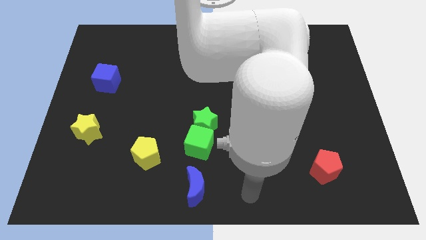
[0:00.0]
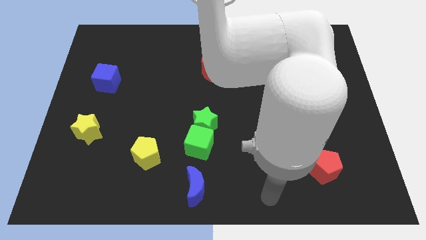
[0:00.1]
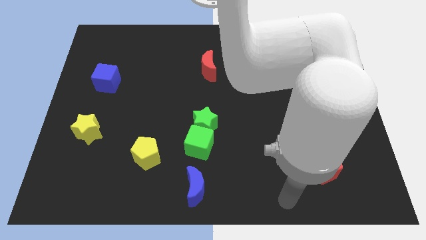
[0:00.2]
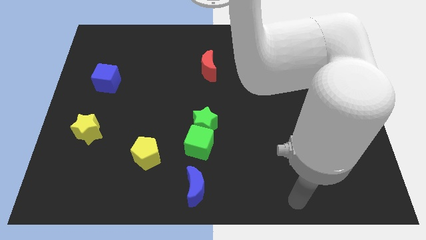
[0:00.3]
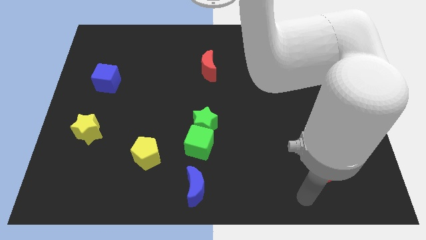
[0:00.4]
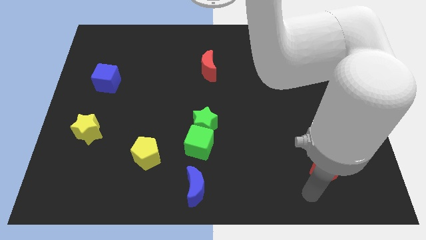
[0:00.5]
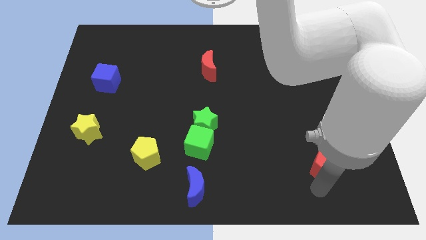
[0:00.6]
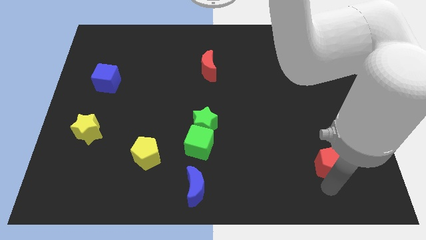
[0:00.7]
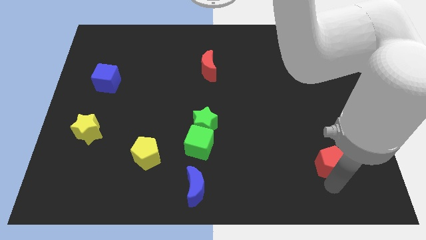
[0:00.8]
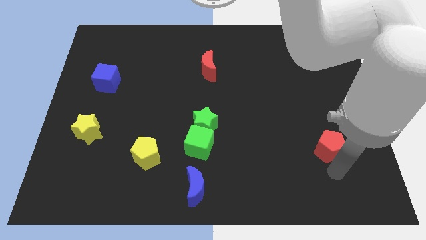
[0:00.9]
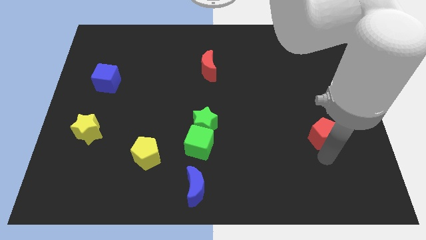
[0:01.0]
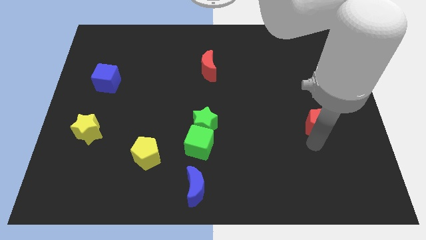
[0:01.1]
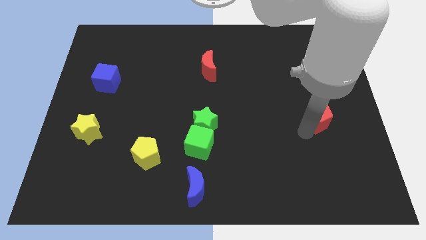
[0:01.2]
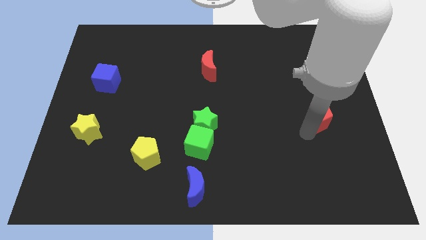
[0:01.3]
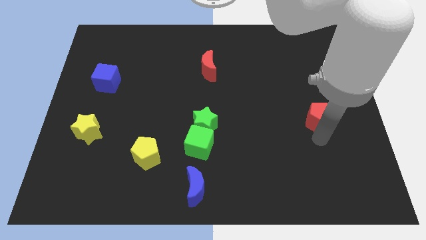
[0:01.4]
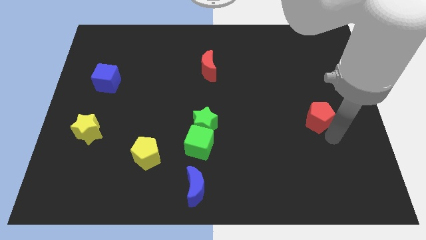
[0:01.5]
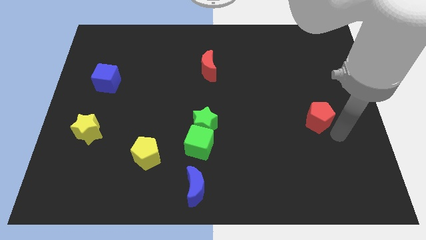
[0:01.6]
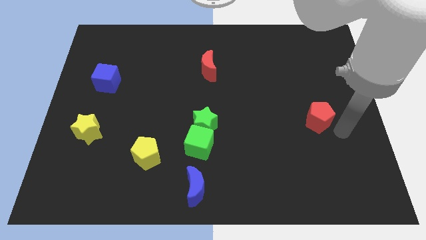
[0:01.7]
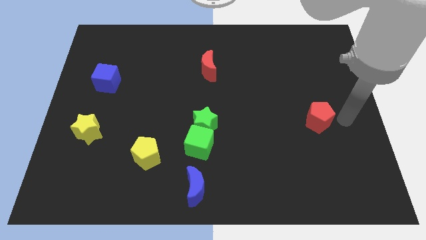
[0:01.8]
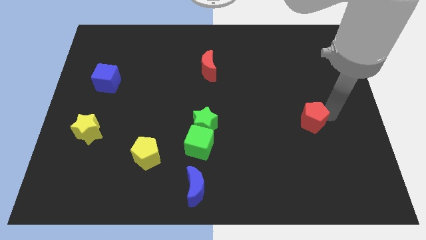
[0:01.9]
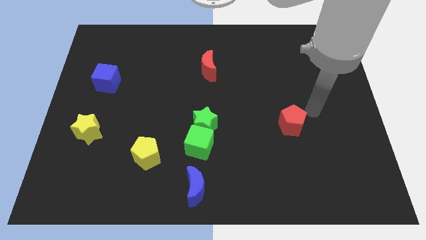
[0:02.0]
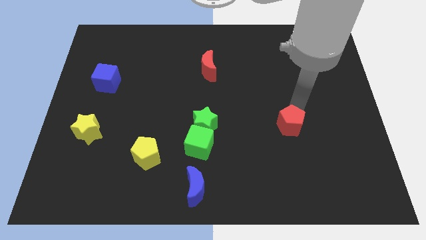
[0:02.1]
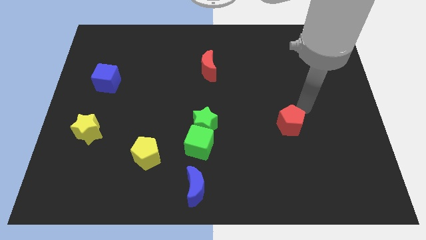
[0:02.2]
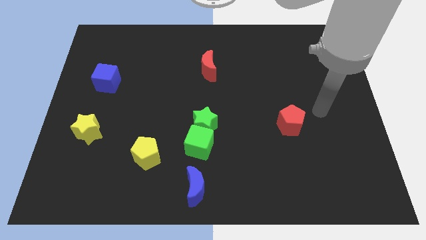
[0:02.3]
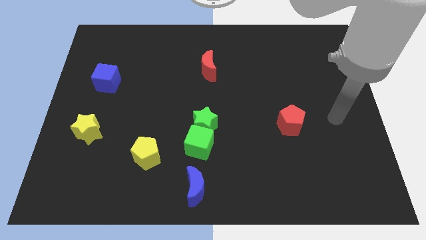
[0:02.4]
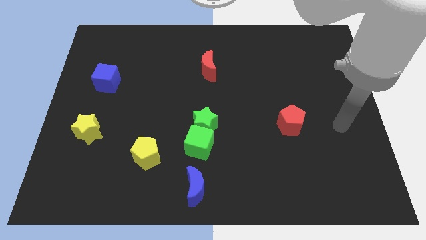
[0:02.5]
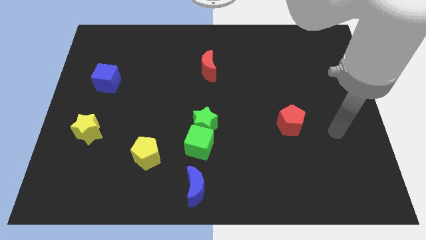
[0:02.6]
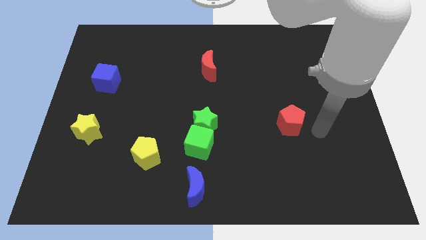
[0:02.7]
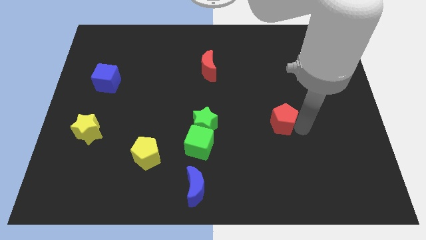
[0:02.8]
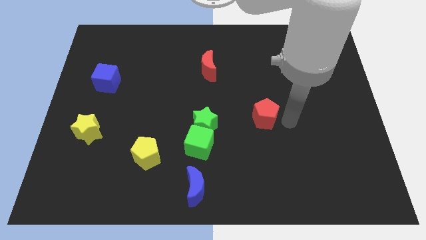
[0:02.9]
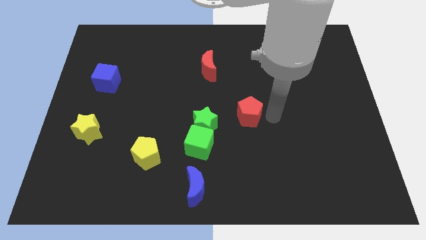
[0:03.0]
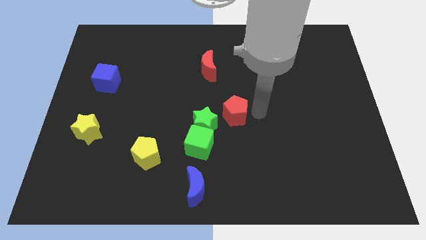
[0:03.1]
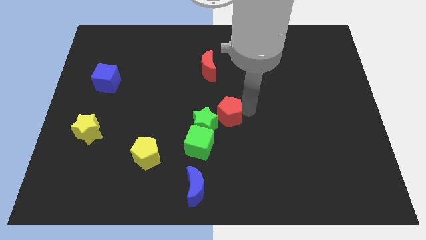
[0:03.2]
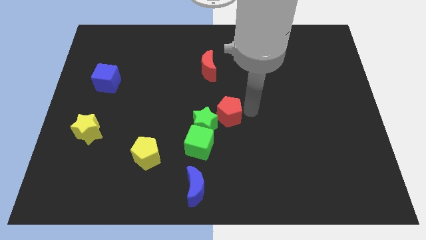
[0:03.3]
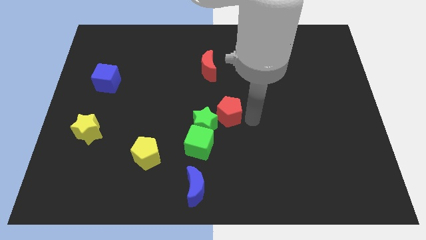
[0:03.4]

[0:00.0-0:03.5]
push the red pentagon to the right of the green star

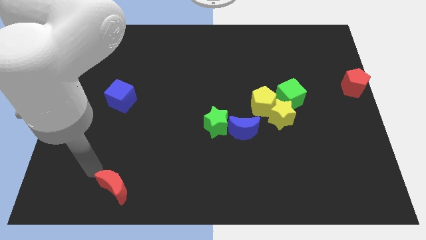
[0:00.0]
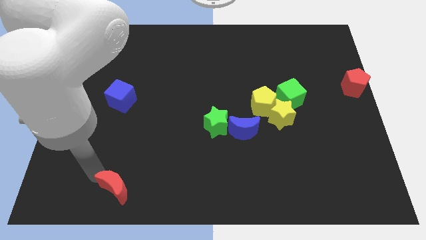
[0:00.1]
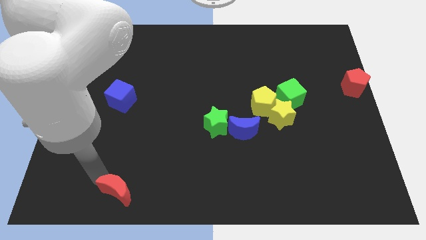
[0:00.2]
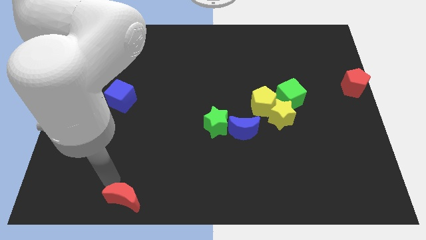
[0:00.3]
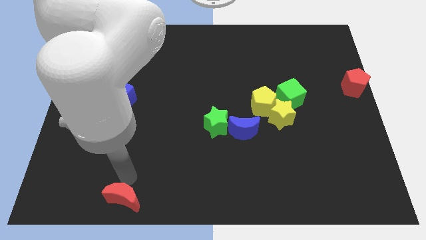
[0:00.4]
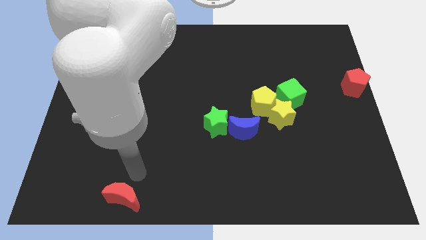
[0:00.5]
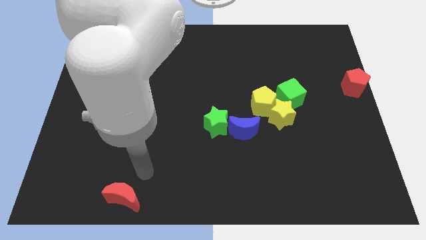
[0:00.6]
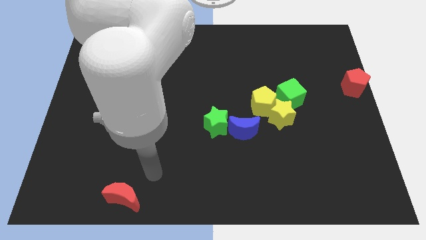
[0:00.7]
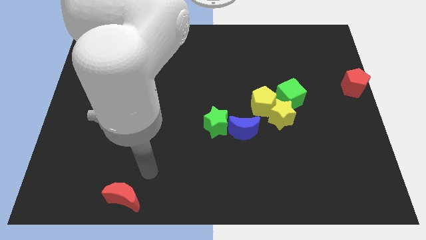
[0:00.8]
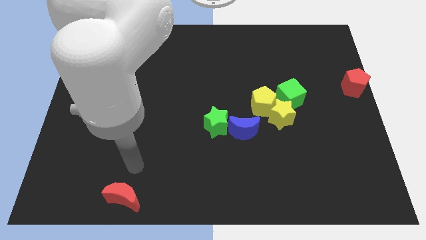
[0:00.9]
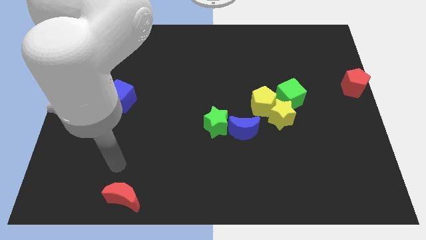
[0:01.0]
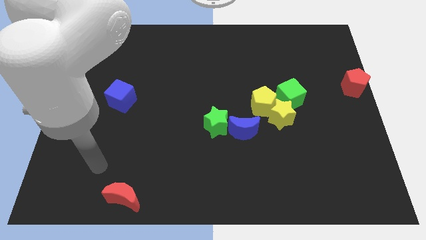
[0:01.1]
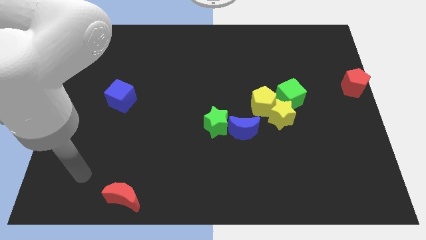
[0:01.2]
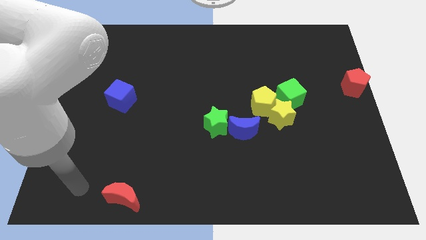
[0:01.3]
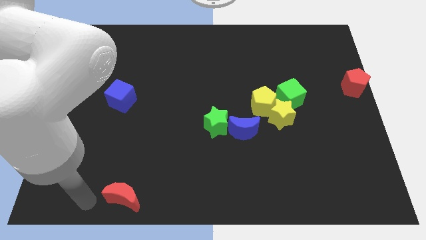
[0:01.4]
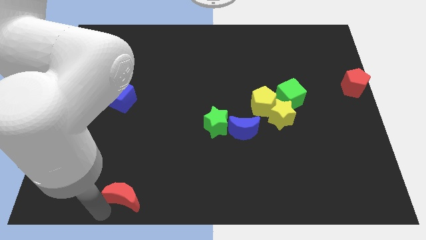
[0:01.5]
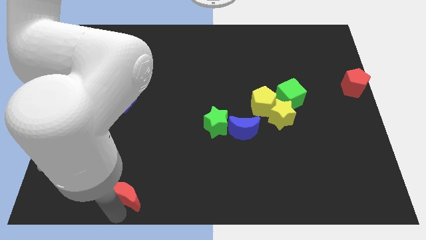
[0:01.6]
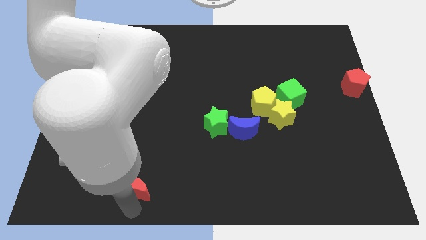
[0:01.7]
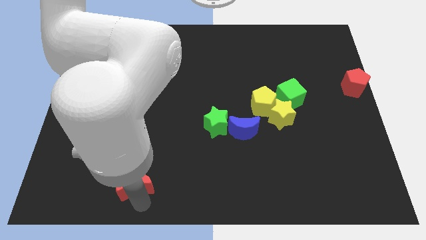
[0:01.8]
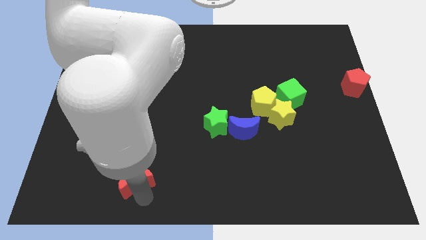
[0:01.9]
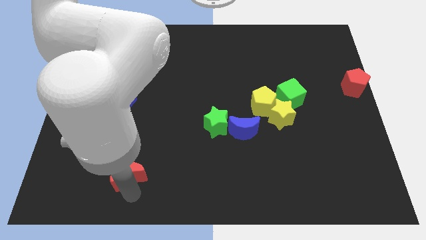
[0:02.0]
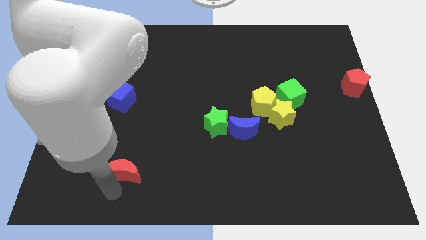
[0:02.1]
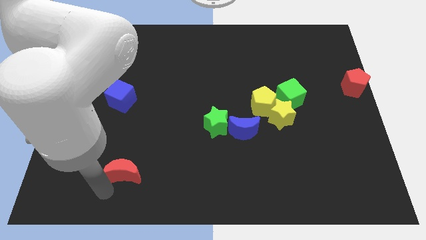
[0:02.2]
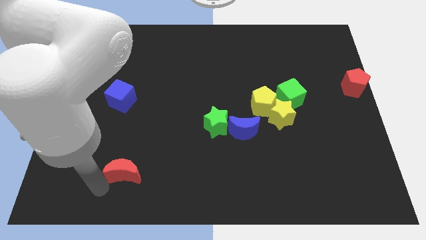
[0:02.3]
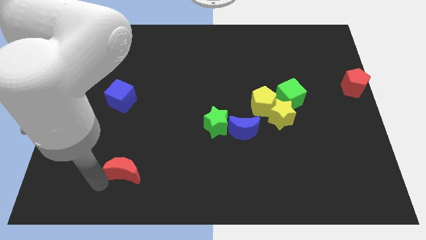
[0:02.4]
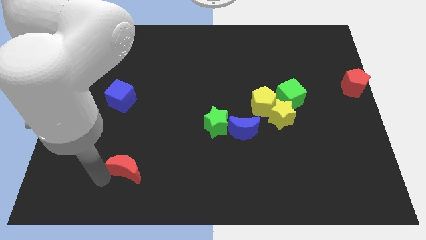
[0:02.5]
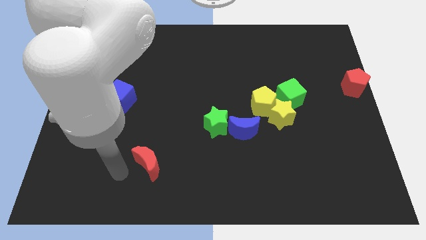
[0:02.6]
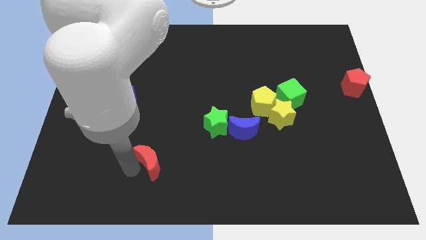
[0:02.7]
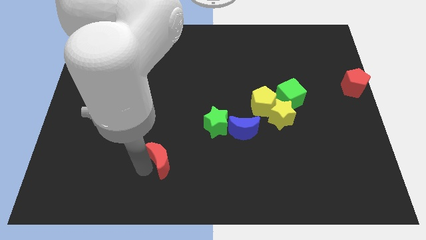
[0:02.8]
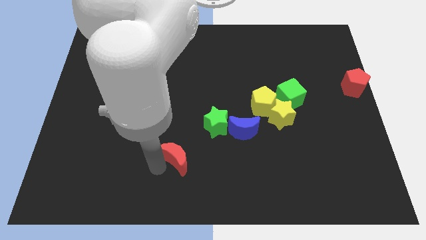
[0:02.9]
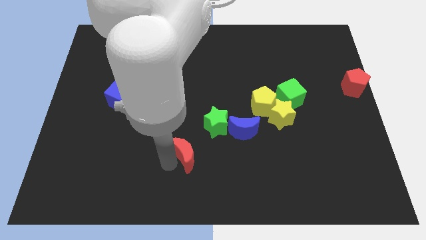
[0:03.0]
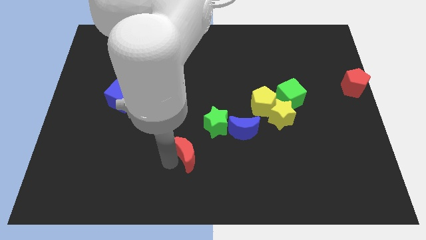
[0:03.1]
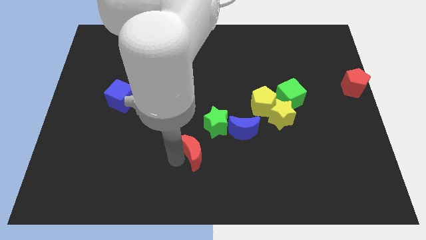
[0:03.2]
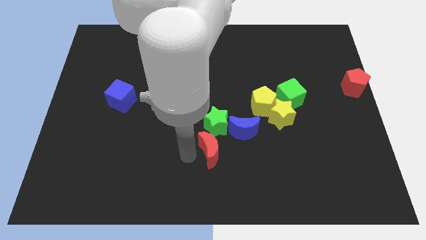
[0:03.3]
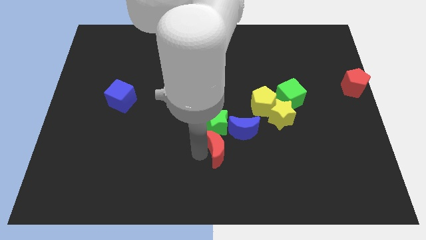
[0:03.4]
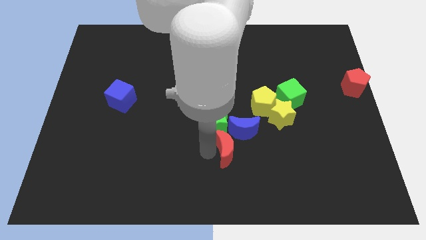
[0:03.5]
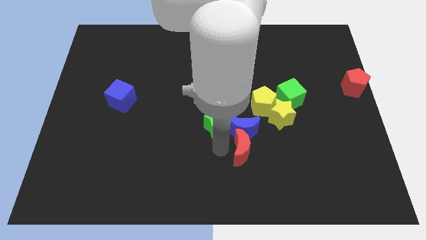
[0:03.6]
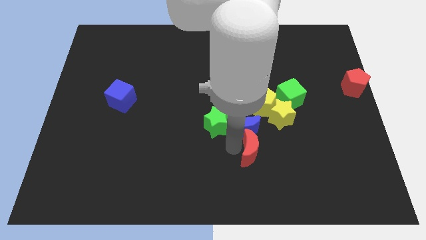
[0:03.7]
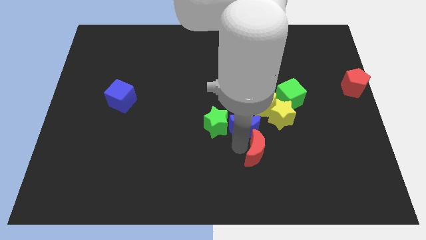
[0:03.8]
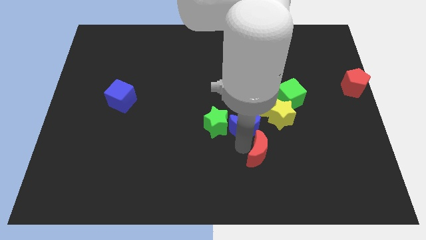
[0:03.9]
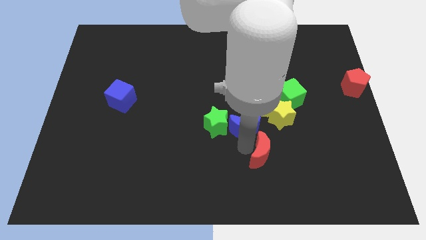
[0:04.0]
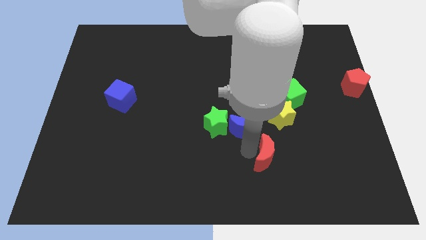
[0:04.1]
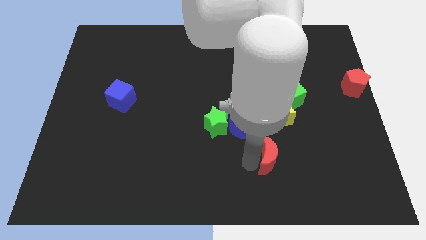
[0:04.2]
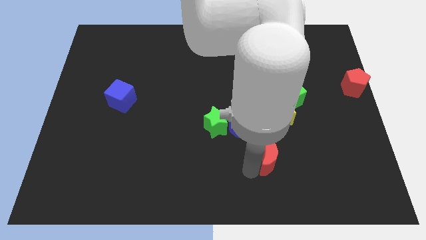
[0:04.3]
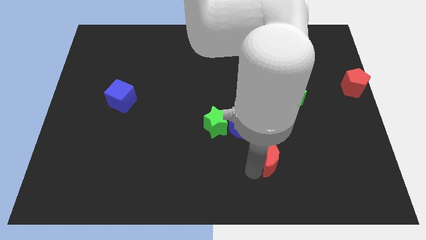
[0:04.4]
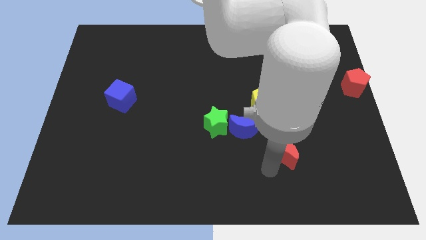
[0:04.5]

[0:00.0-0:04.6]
put the red moon below the yellow star

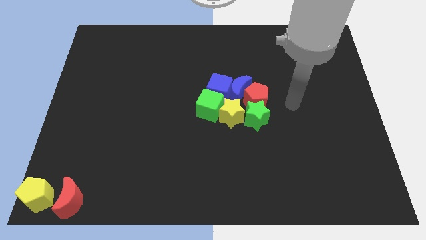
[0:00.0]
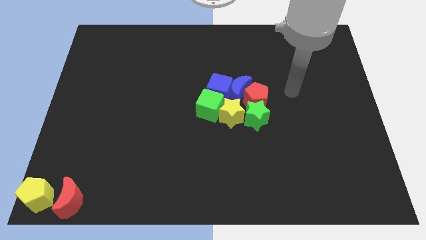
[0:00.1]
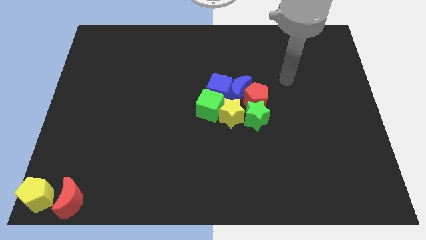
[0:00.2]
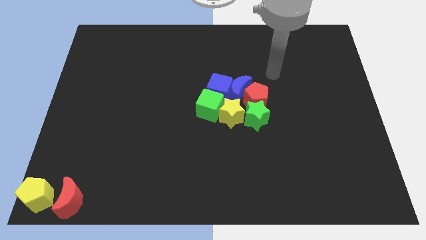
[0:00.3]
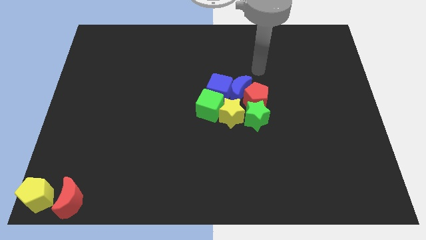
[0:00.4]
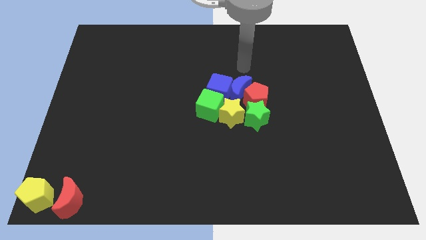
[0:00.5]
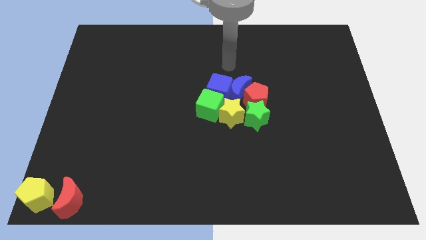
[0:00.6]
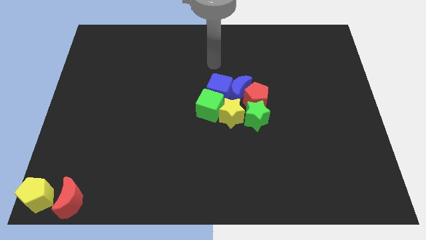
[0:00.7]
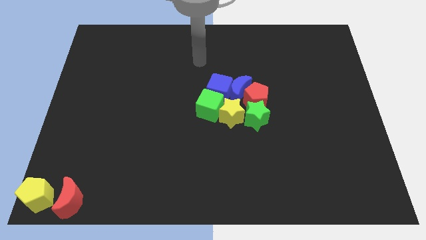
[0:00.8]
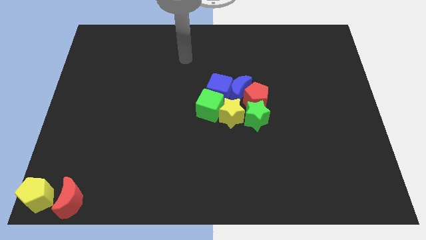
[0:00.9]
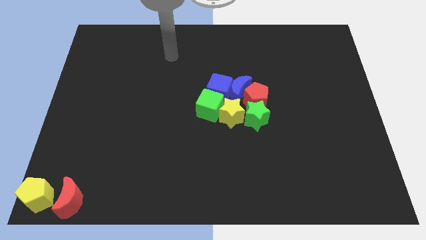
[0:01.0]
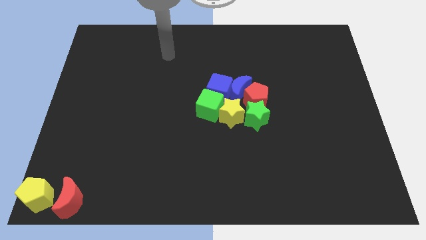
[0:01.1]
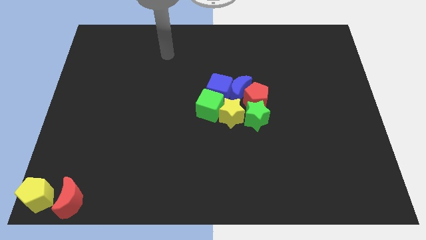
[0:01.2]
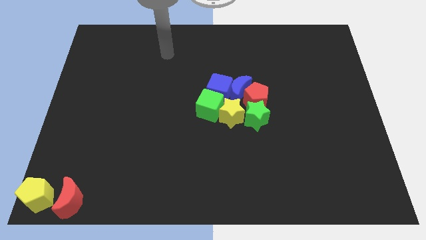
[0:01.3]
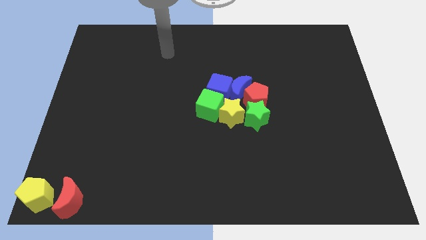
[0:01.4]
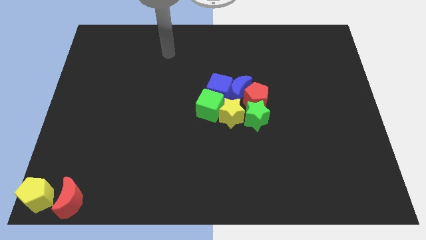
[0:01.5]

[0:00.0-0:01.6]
move your hand towards the top left
